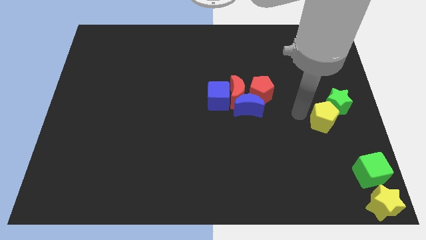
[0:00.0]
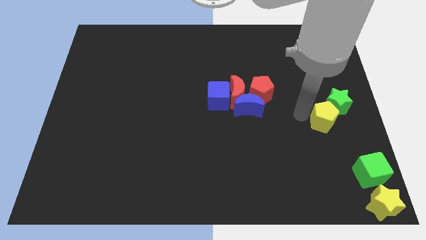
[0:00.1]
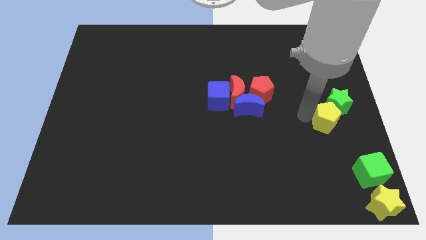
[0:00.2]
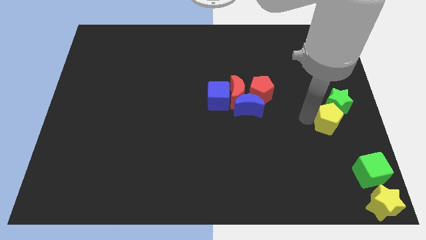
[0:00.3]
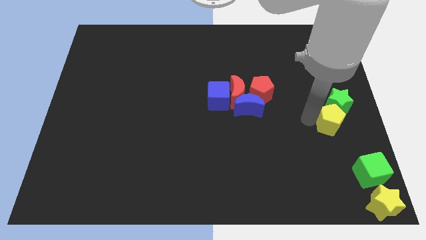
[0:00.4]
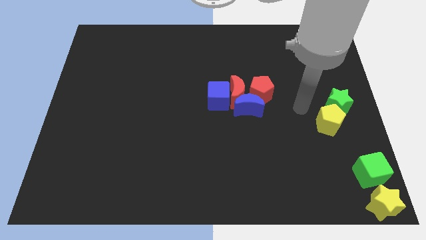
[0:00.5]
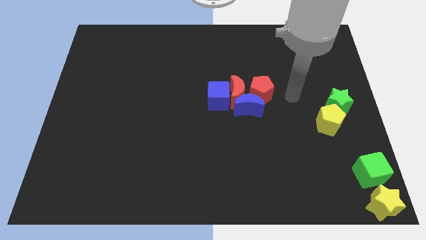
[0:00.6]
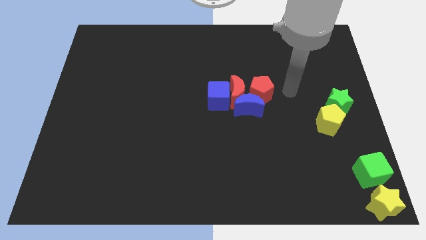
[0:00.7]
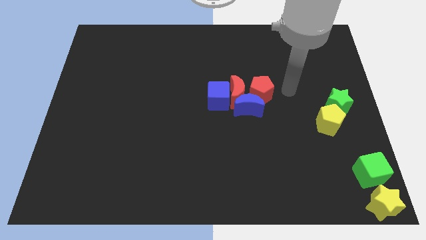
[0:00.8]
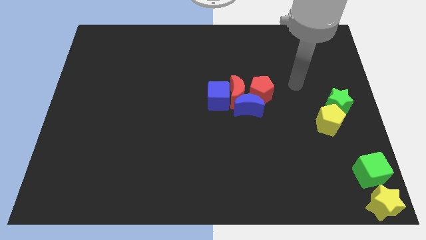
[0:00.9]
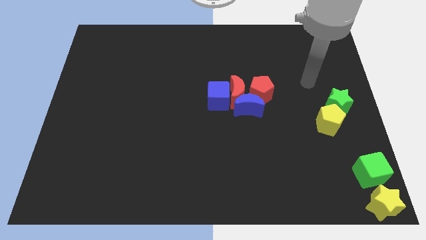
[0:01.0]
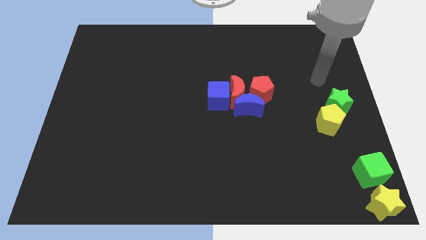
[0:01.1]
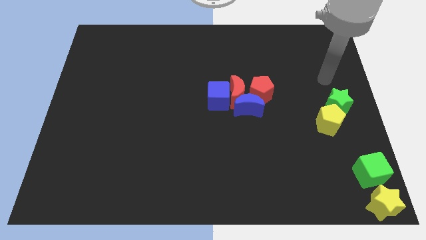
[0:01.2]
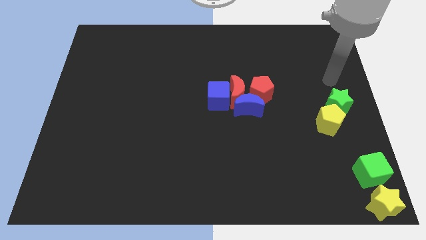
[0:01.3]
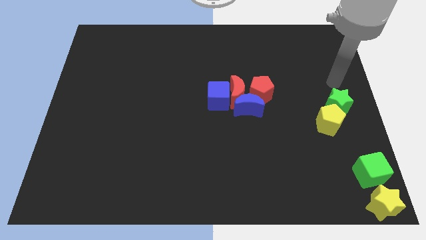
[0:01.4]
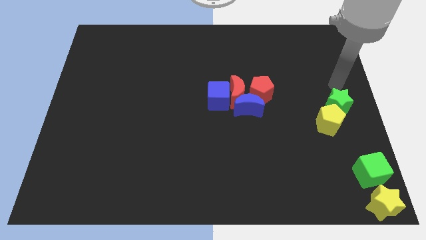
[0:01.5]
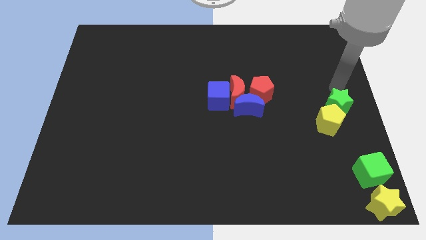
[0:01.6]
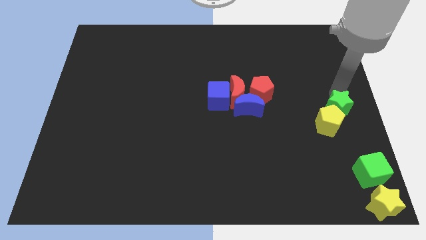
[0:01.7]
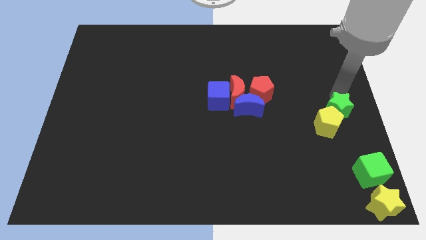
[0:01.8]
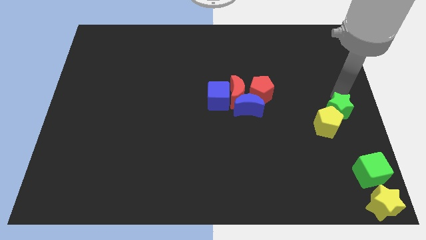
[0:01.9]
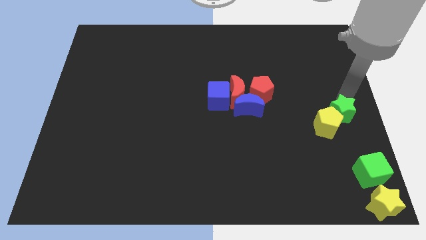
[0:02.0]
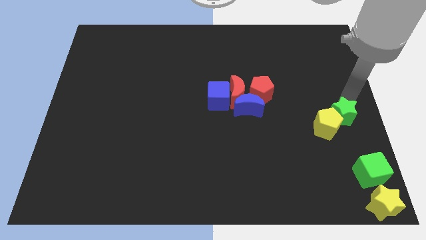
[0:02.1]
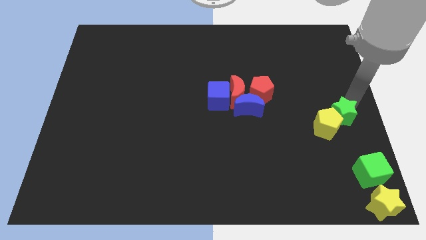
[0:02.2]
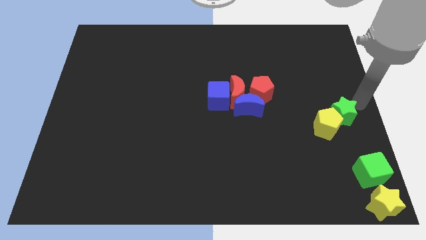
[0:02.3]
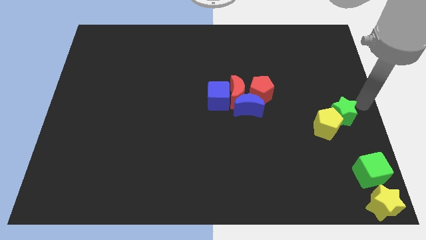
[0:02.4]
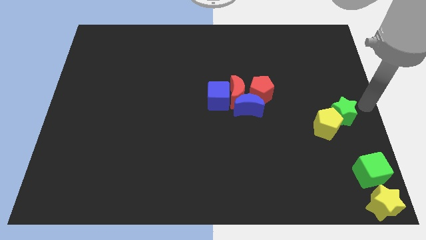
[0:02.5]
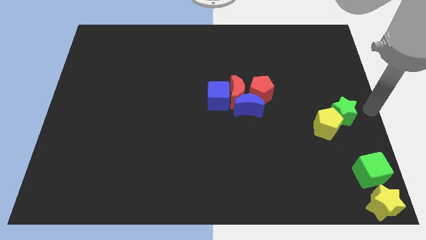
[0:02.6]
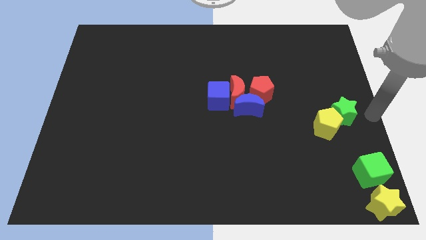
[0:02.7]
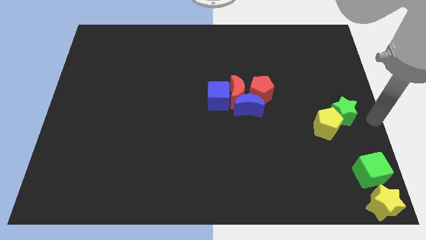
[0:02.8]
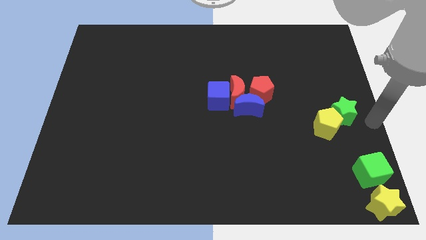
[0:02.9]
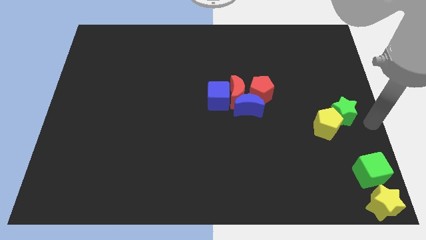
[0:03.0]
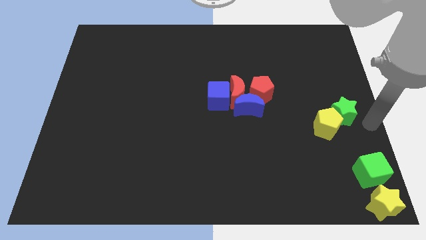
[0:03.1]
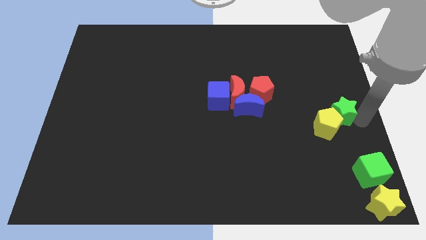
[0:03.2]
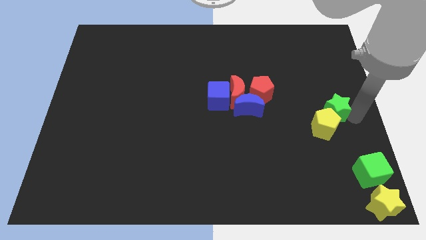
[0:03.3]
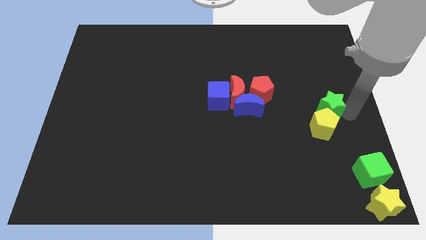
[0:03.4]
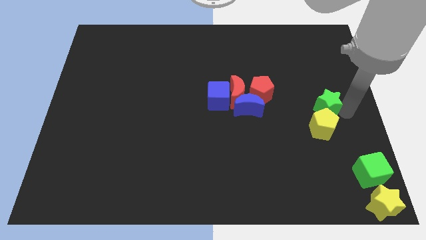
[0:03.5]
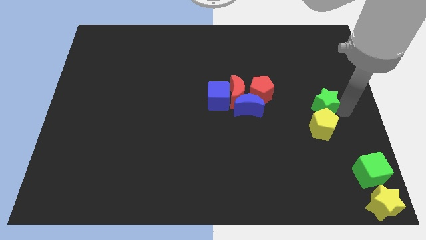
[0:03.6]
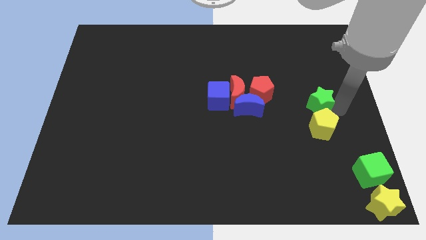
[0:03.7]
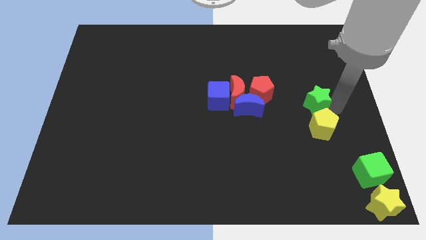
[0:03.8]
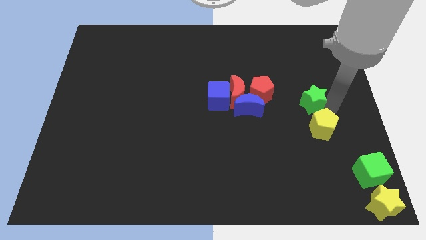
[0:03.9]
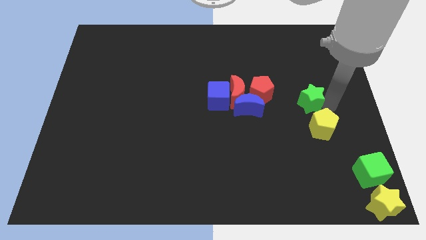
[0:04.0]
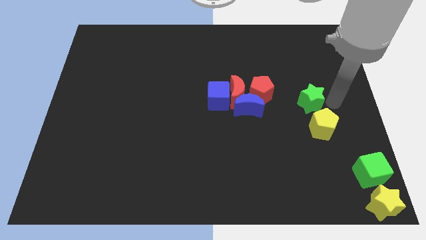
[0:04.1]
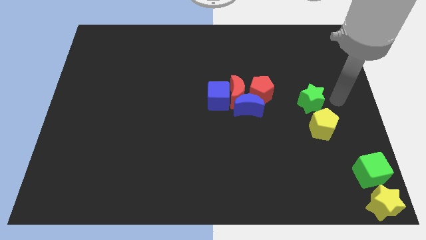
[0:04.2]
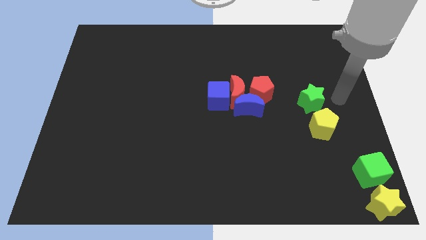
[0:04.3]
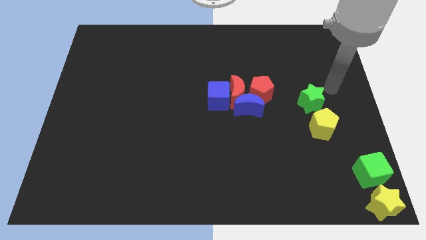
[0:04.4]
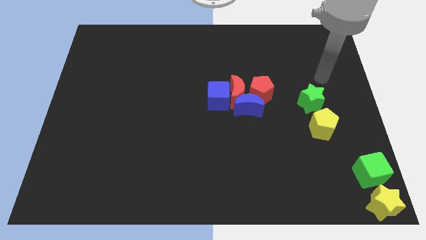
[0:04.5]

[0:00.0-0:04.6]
push the green star to the top of the yellow pentagon

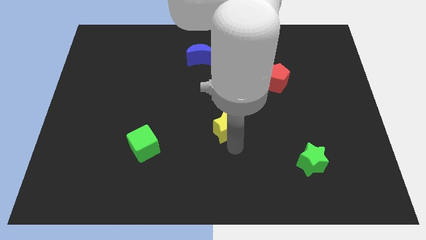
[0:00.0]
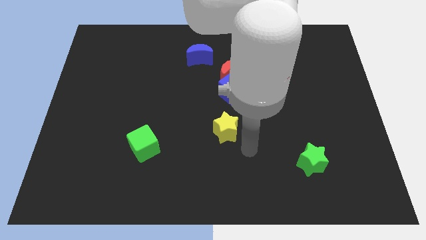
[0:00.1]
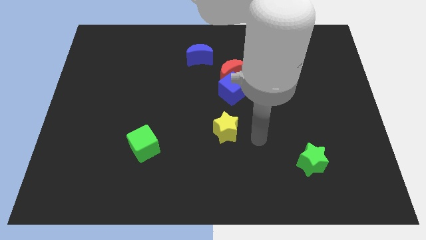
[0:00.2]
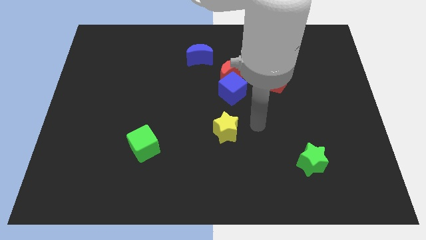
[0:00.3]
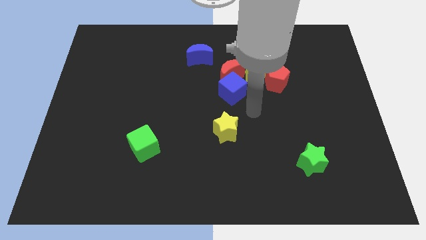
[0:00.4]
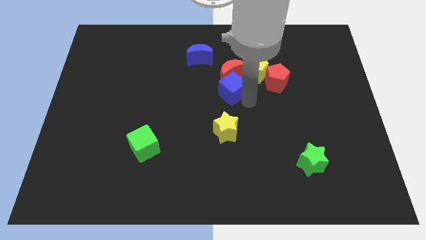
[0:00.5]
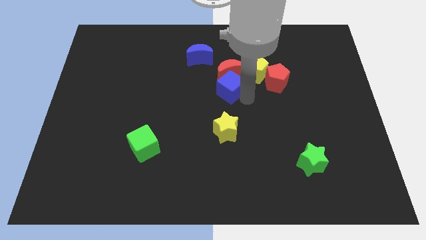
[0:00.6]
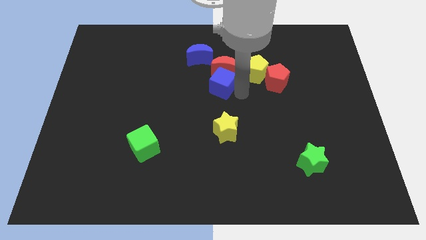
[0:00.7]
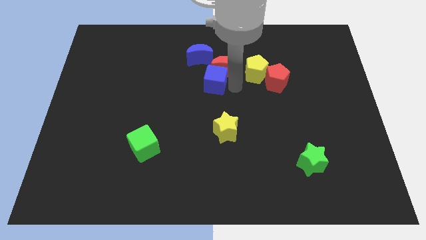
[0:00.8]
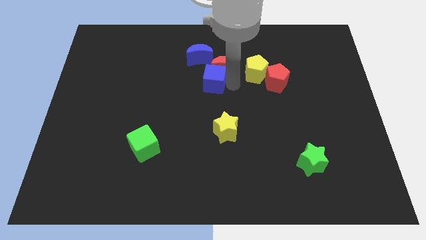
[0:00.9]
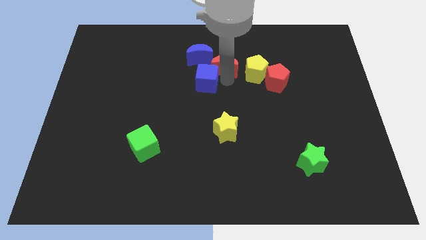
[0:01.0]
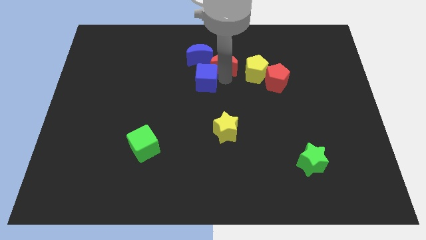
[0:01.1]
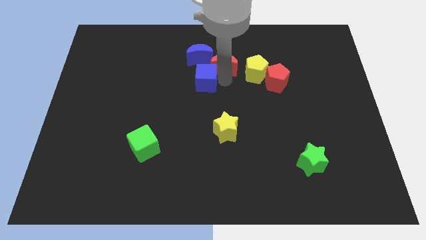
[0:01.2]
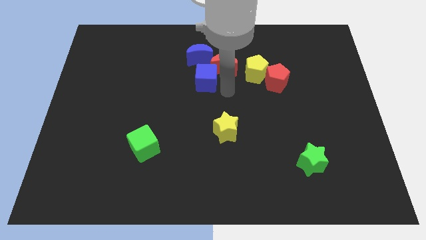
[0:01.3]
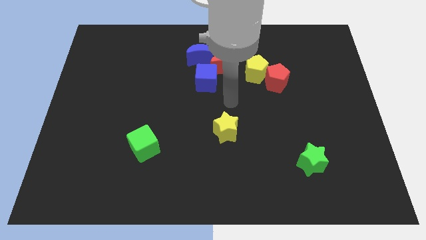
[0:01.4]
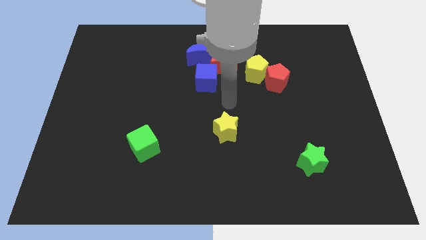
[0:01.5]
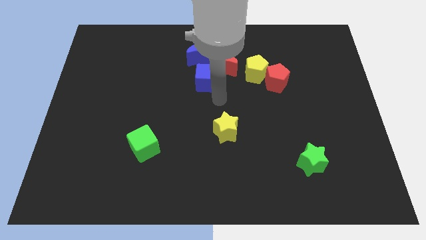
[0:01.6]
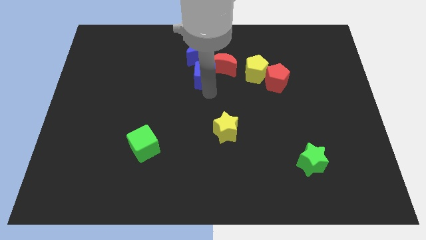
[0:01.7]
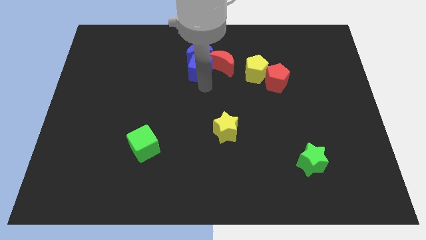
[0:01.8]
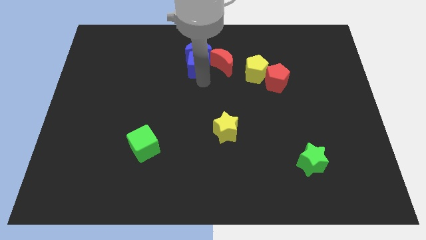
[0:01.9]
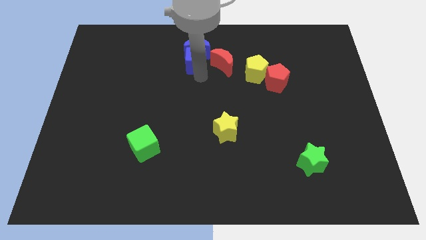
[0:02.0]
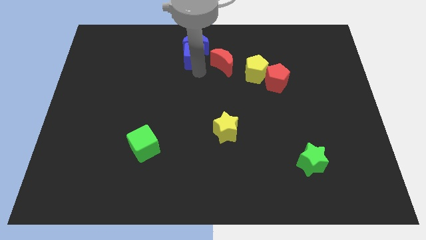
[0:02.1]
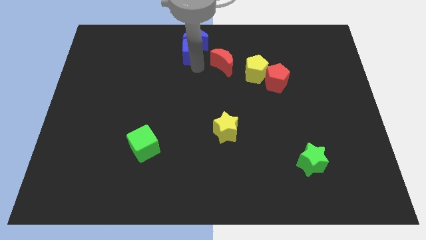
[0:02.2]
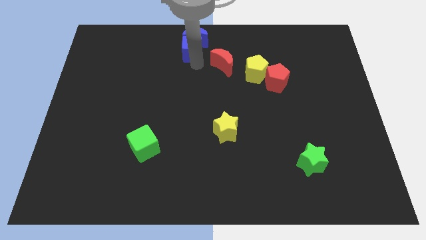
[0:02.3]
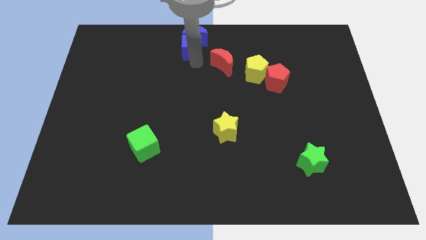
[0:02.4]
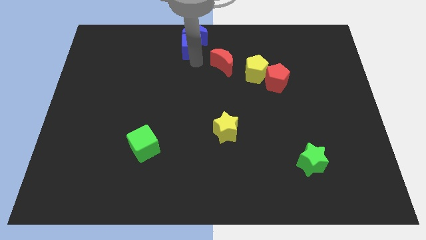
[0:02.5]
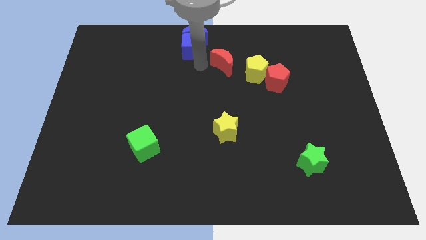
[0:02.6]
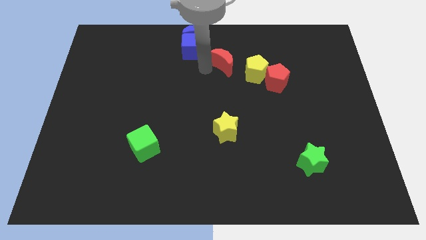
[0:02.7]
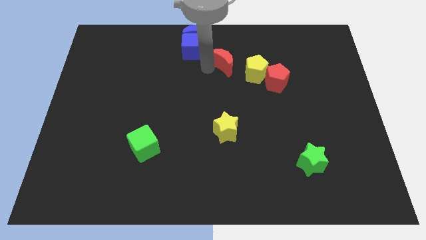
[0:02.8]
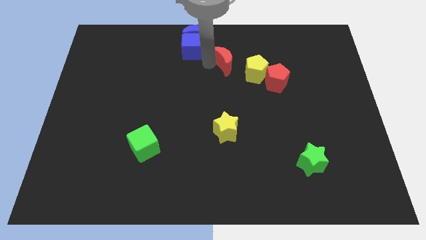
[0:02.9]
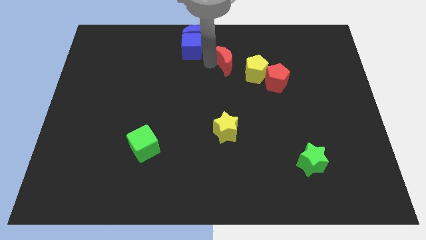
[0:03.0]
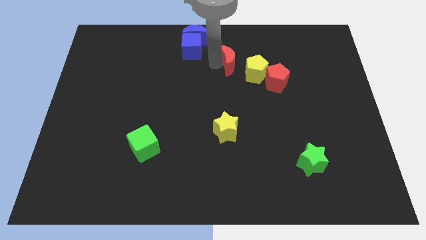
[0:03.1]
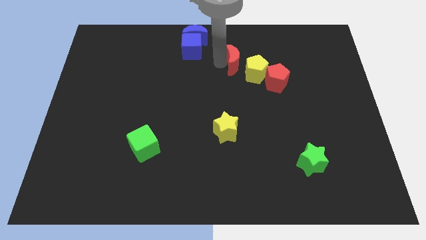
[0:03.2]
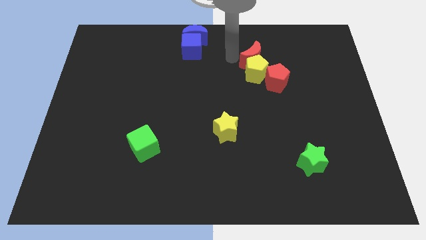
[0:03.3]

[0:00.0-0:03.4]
separate blue blocks and the red moon

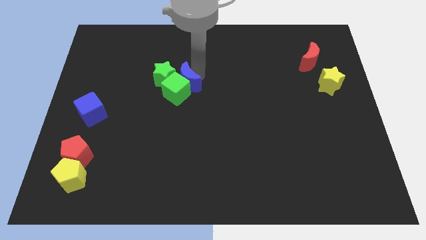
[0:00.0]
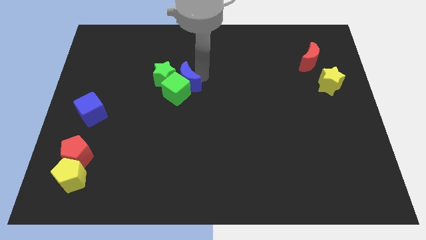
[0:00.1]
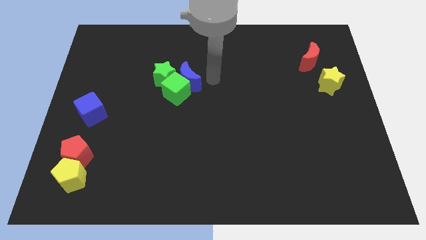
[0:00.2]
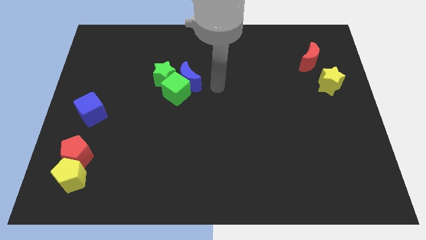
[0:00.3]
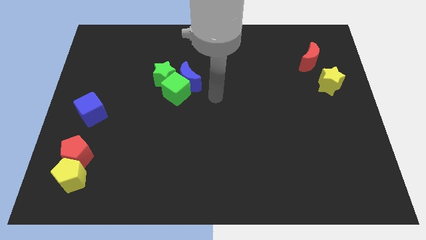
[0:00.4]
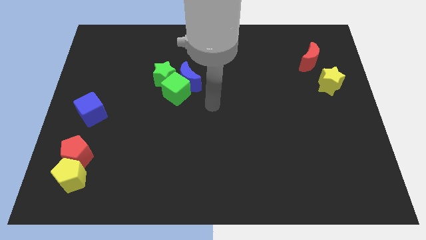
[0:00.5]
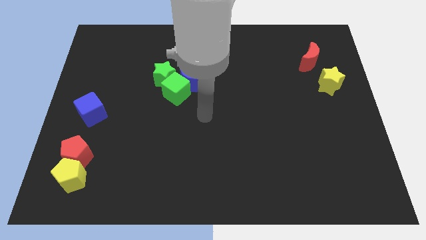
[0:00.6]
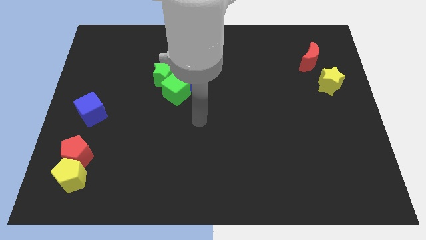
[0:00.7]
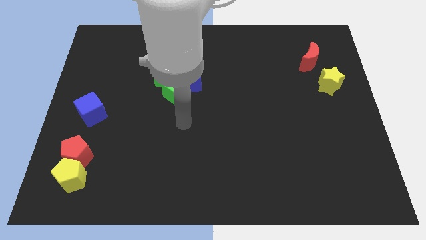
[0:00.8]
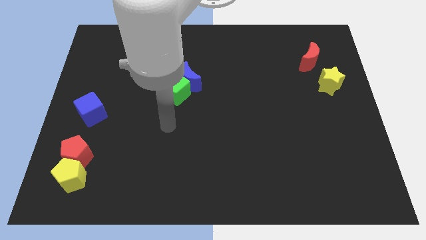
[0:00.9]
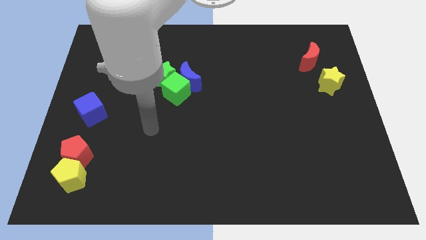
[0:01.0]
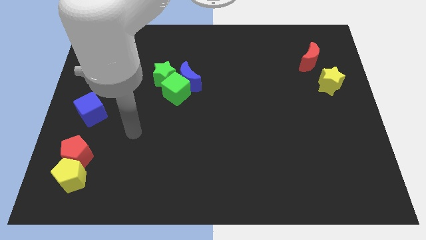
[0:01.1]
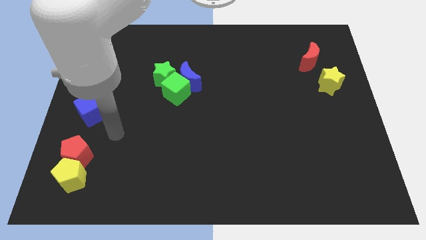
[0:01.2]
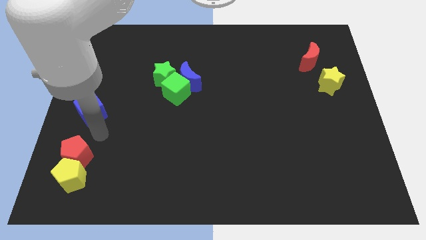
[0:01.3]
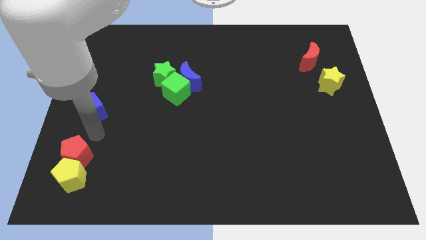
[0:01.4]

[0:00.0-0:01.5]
move your arm away from the blue moon
